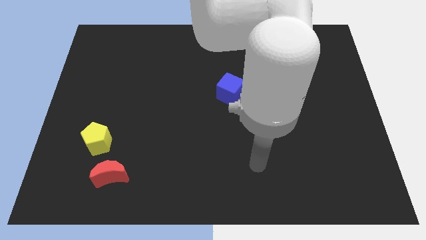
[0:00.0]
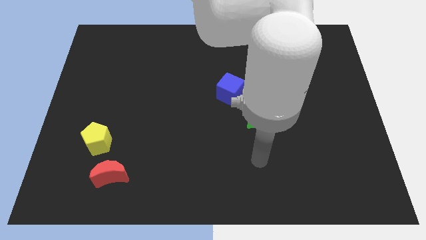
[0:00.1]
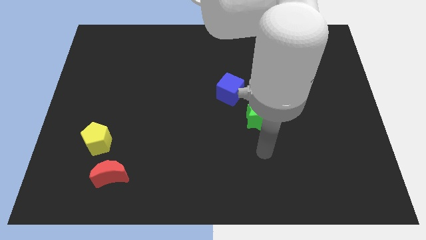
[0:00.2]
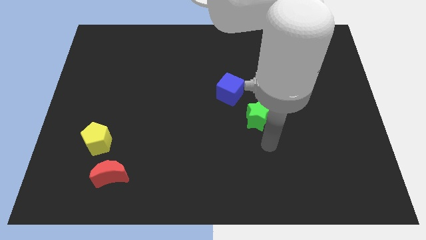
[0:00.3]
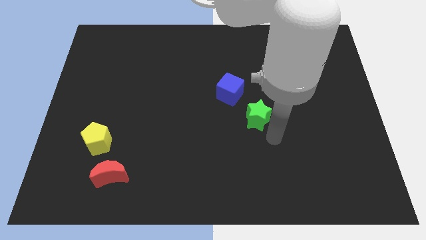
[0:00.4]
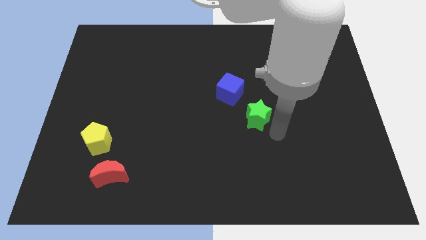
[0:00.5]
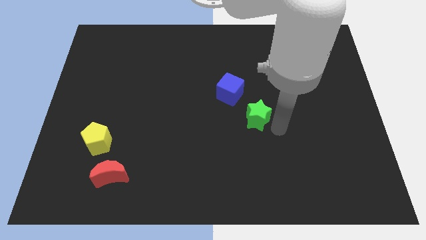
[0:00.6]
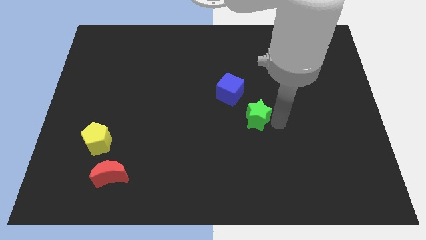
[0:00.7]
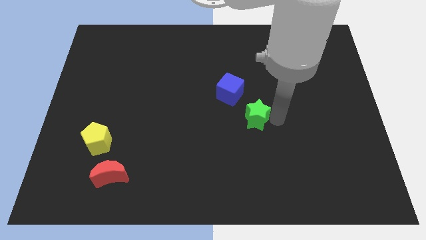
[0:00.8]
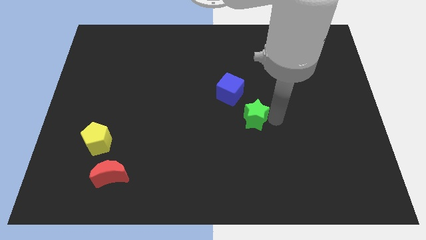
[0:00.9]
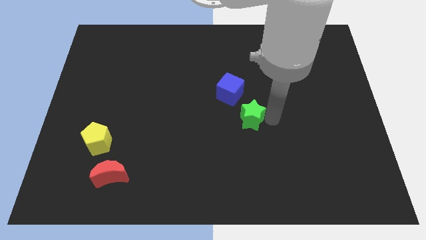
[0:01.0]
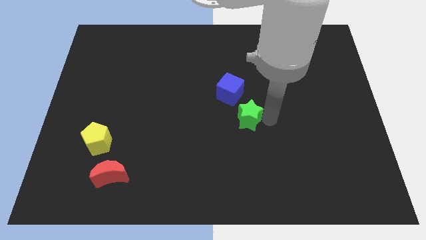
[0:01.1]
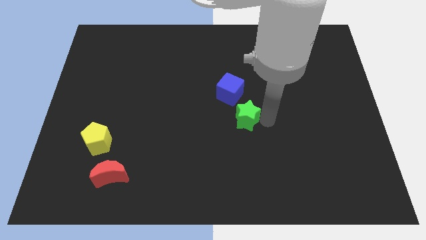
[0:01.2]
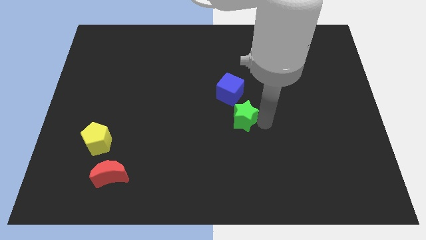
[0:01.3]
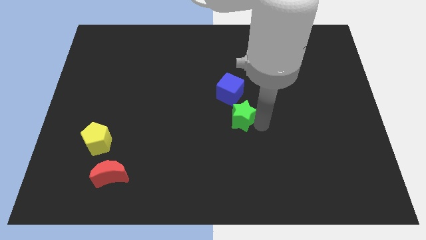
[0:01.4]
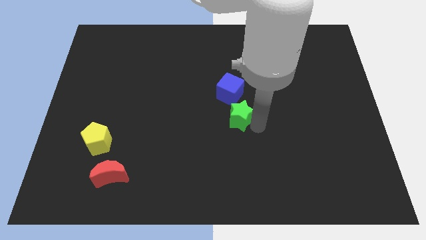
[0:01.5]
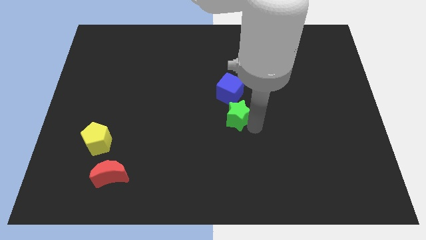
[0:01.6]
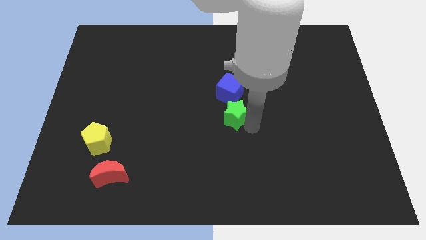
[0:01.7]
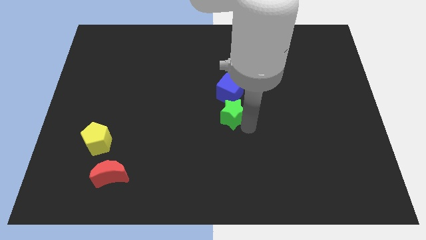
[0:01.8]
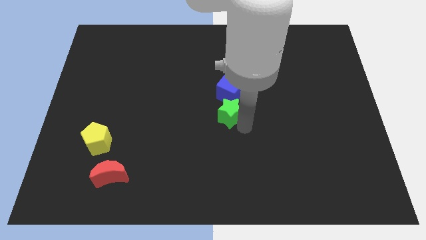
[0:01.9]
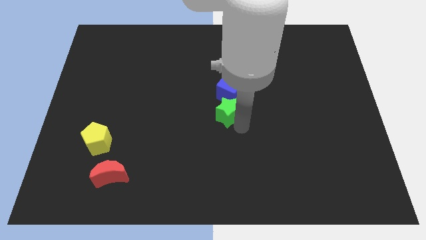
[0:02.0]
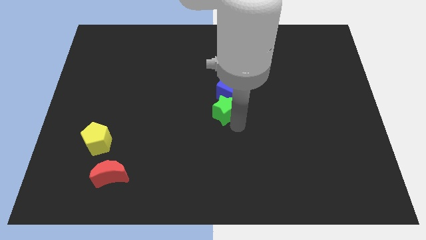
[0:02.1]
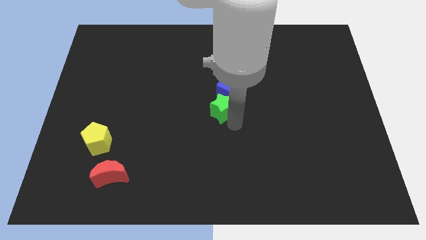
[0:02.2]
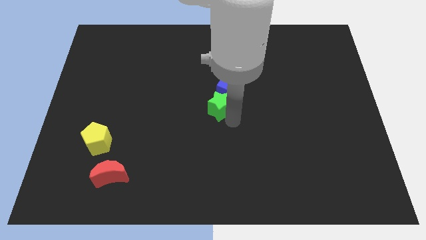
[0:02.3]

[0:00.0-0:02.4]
move the green star towards the blue cube

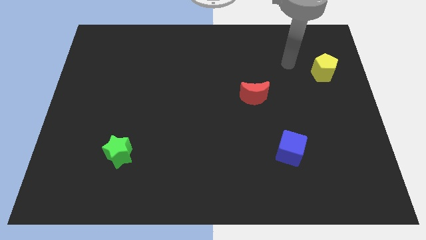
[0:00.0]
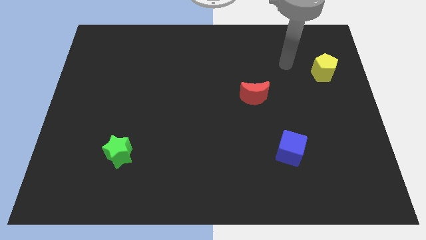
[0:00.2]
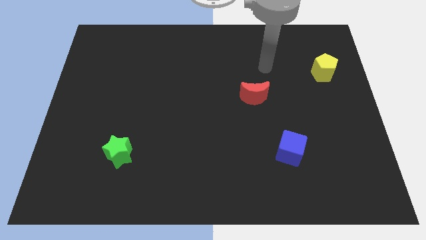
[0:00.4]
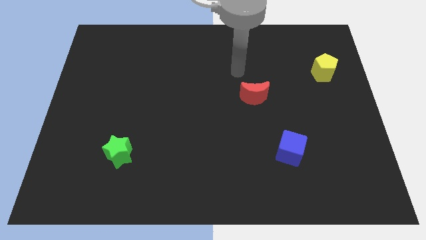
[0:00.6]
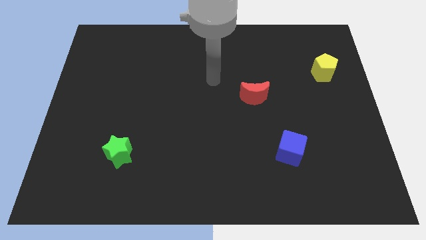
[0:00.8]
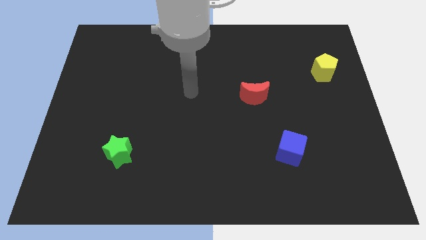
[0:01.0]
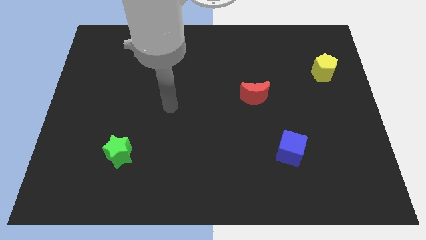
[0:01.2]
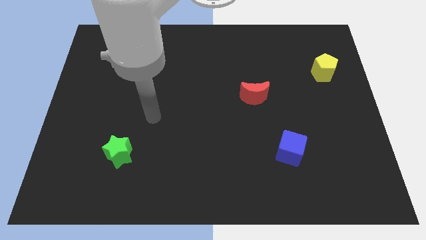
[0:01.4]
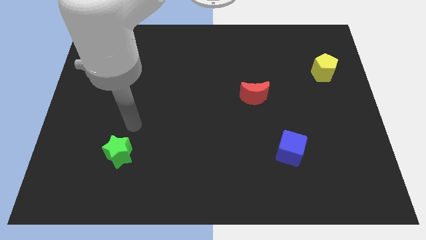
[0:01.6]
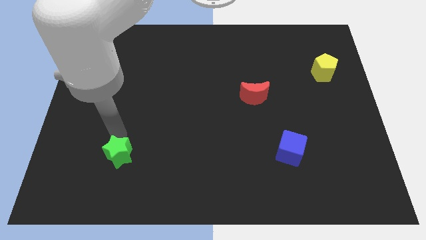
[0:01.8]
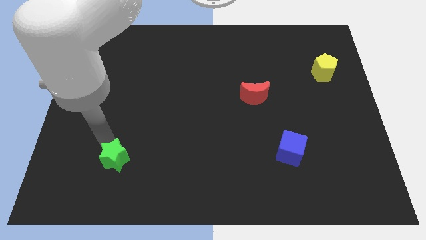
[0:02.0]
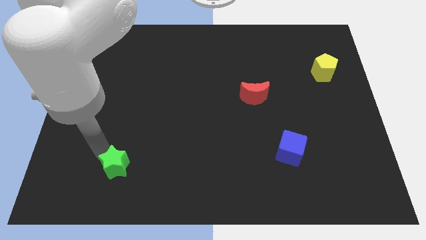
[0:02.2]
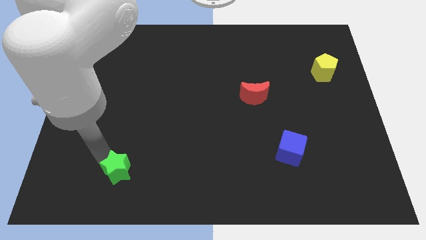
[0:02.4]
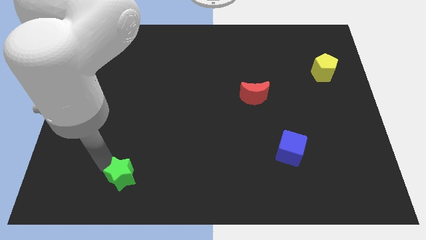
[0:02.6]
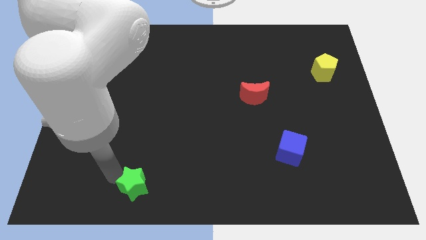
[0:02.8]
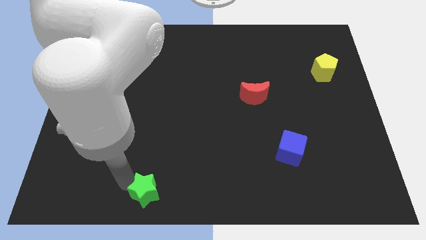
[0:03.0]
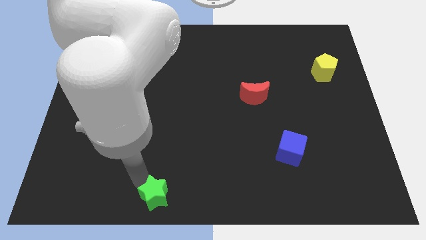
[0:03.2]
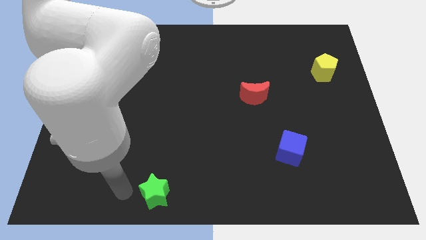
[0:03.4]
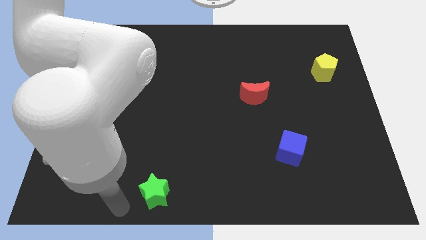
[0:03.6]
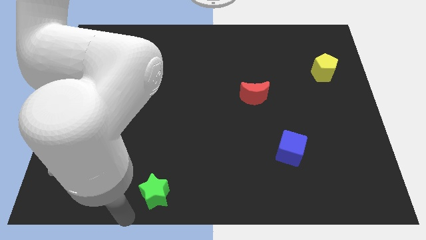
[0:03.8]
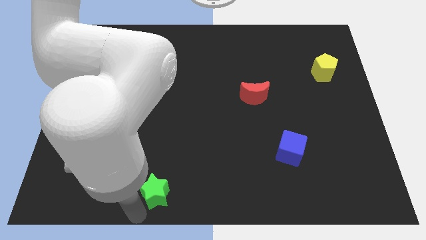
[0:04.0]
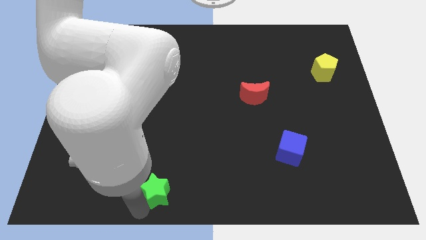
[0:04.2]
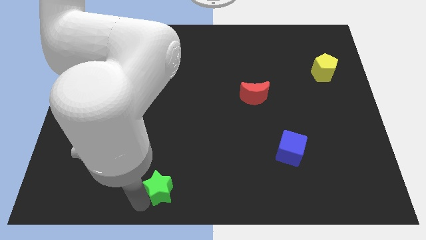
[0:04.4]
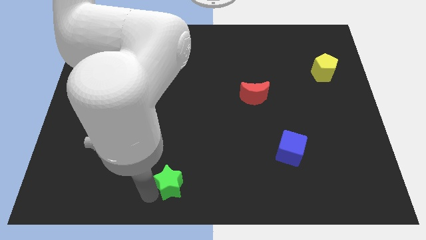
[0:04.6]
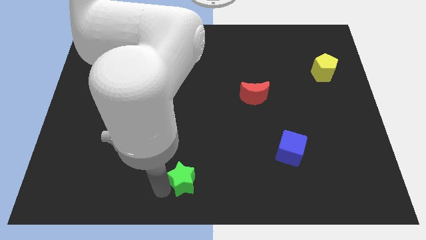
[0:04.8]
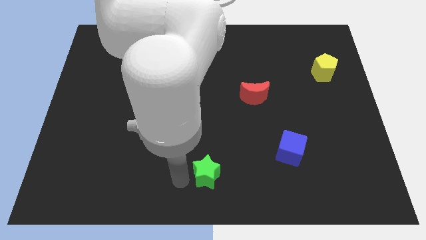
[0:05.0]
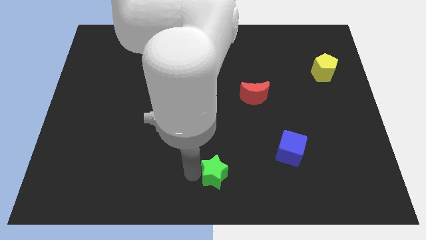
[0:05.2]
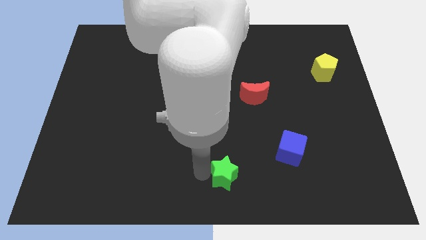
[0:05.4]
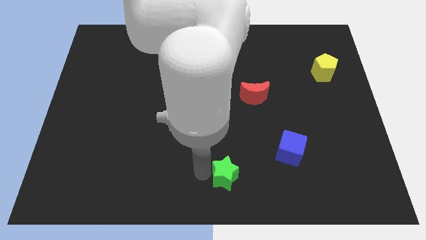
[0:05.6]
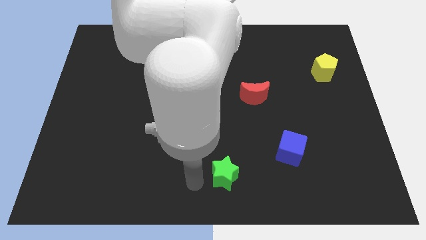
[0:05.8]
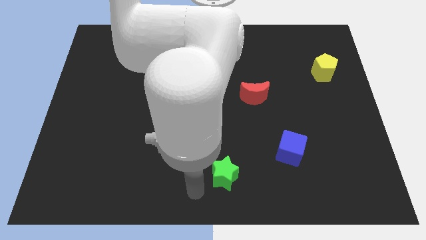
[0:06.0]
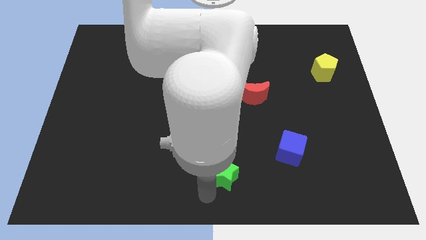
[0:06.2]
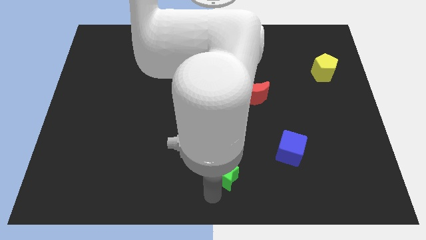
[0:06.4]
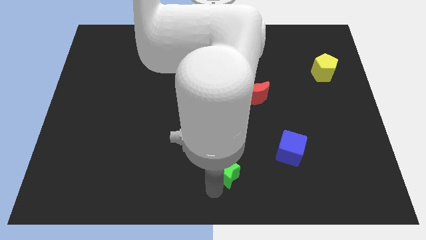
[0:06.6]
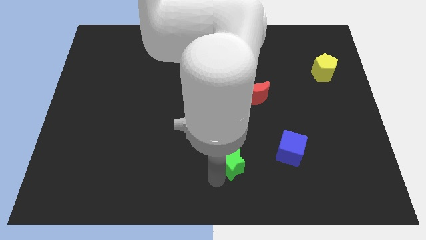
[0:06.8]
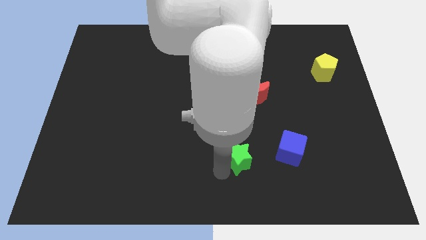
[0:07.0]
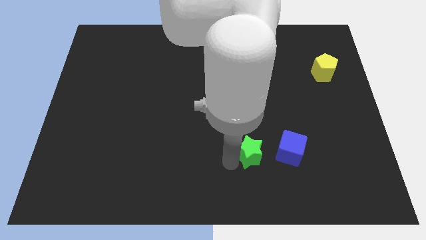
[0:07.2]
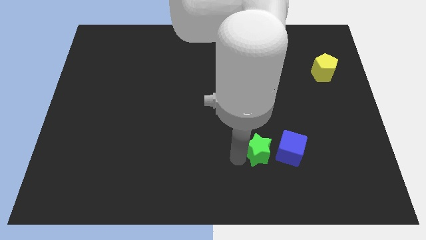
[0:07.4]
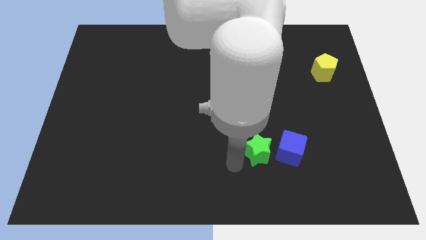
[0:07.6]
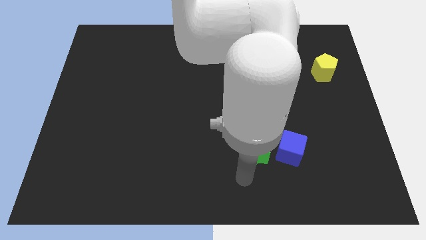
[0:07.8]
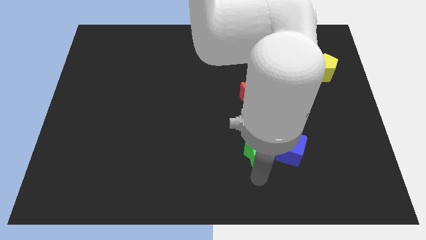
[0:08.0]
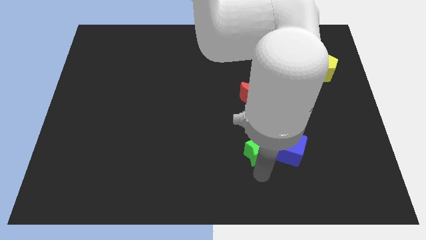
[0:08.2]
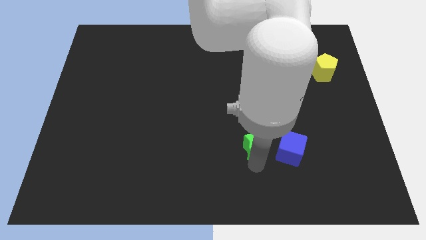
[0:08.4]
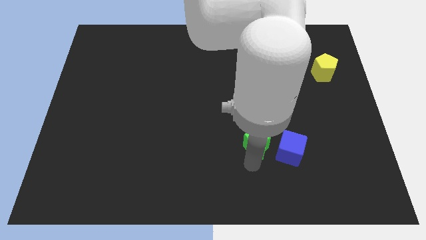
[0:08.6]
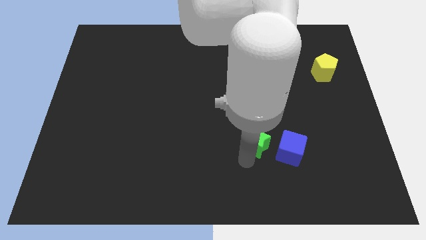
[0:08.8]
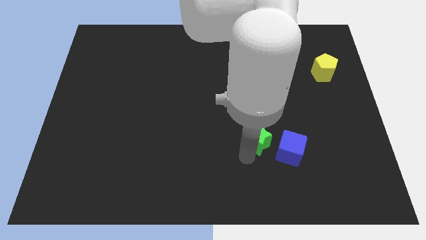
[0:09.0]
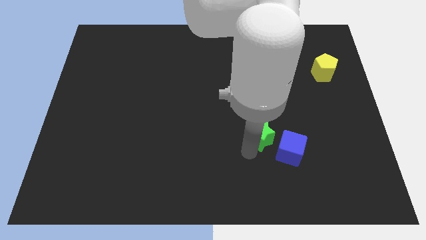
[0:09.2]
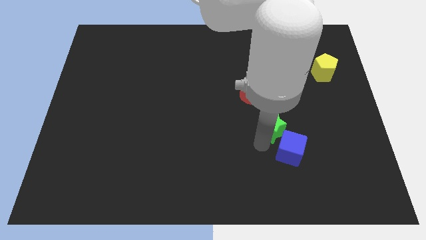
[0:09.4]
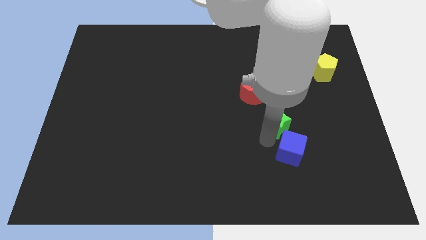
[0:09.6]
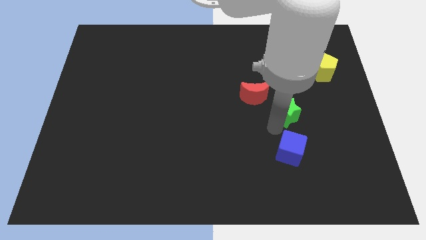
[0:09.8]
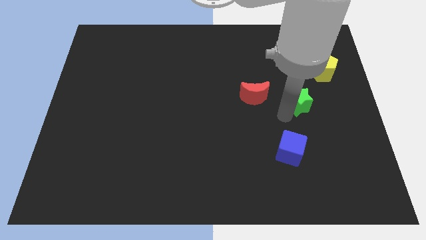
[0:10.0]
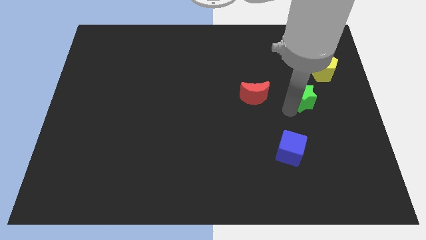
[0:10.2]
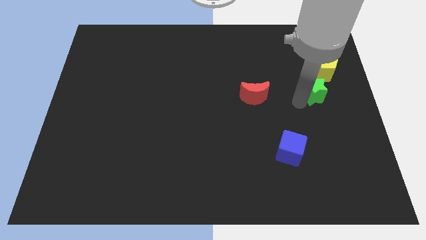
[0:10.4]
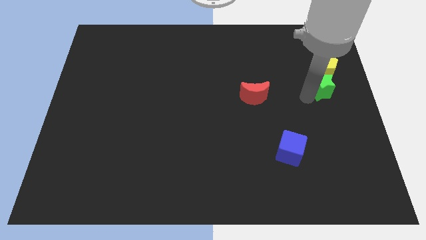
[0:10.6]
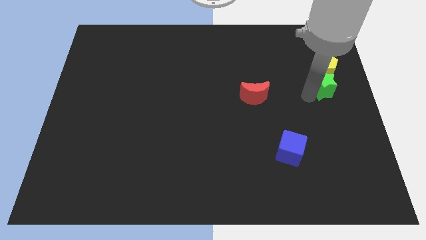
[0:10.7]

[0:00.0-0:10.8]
push the green star to the pentagon

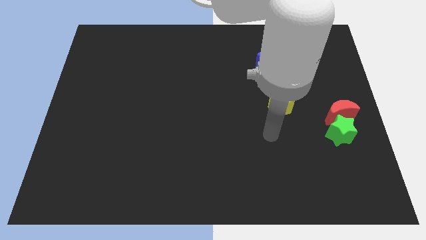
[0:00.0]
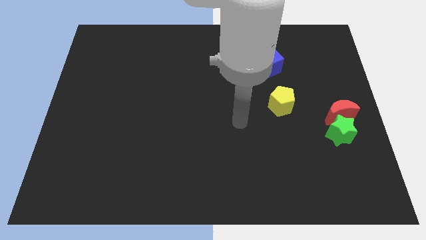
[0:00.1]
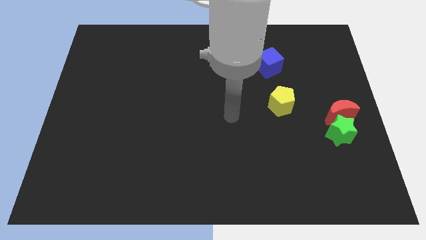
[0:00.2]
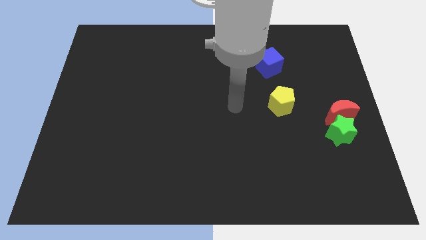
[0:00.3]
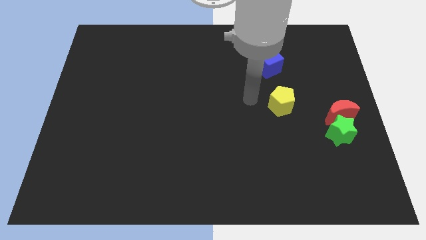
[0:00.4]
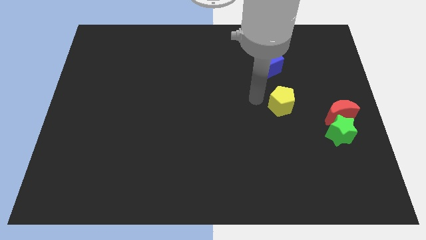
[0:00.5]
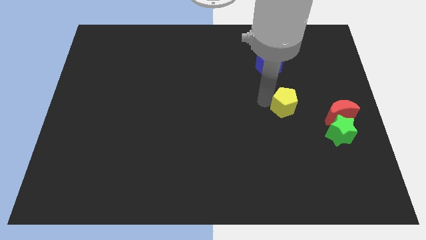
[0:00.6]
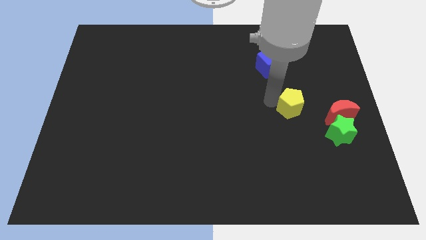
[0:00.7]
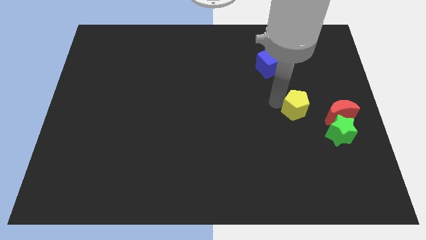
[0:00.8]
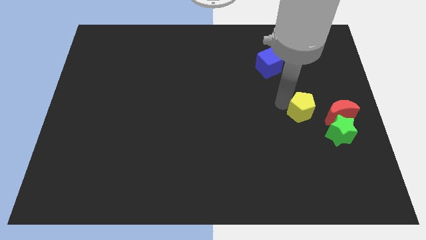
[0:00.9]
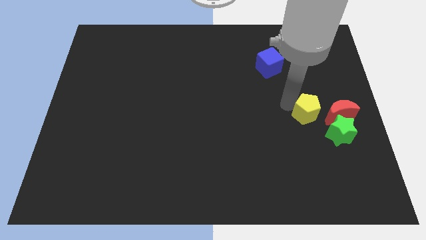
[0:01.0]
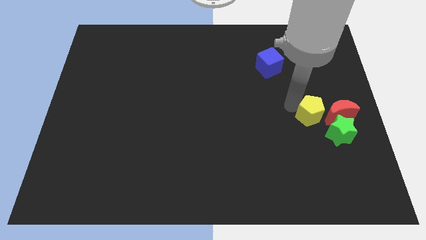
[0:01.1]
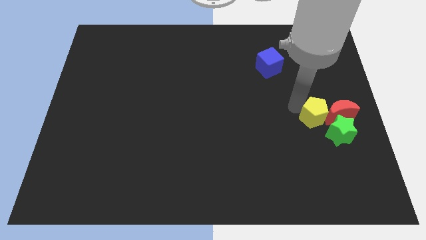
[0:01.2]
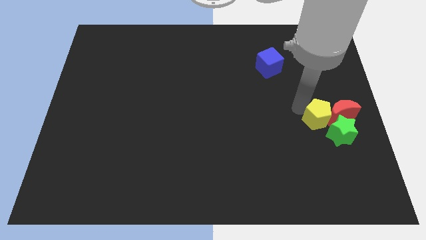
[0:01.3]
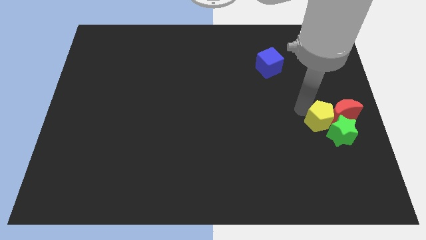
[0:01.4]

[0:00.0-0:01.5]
push the yellow block close to the moon
